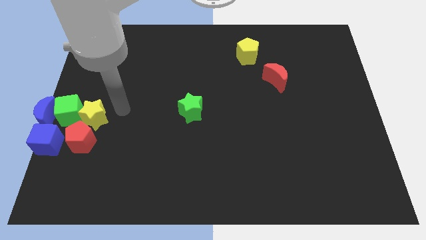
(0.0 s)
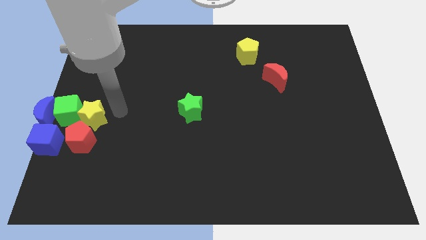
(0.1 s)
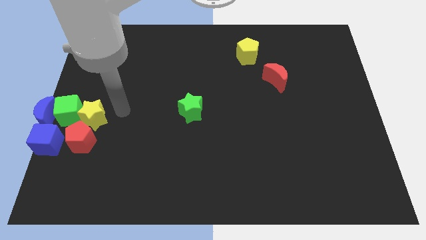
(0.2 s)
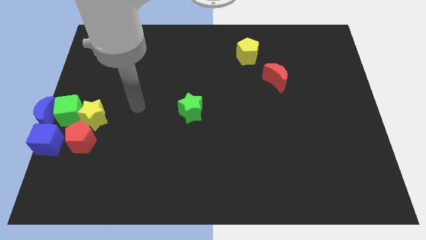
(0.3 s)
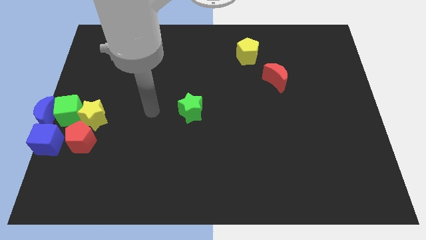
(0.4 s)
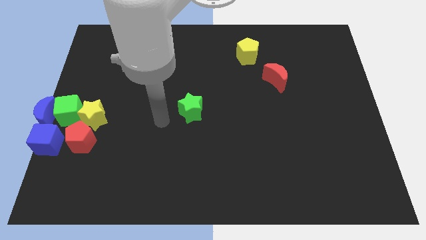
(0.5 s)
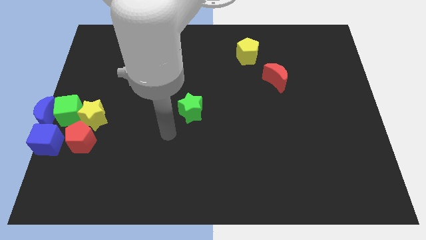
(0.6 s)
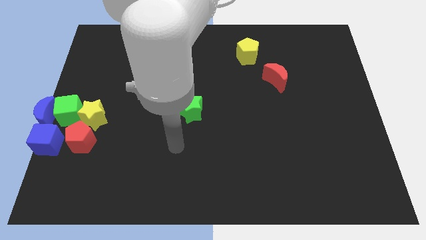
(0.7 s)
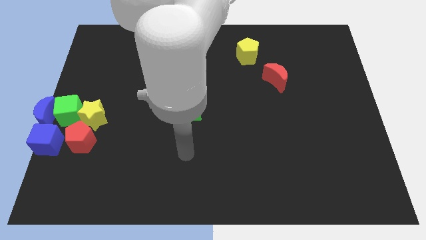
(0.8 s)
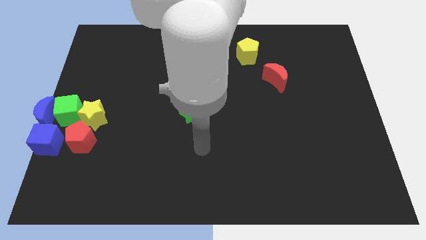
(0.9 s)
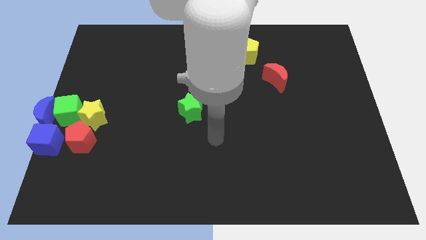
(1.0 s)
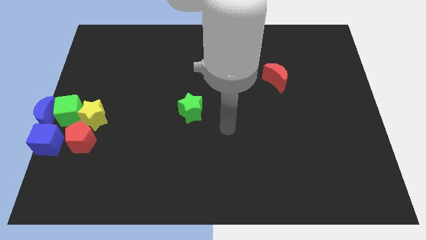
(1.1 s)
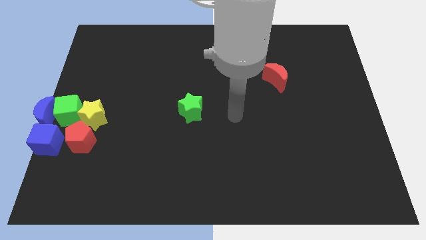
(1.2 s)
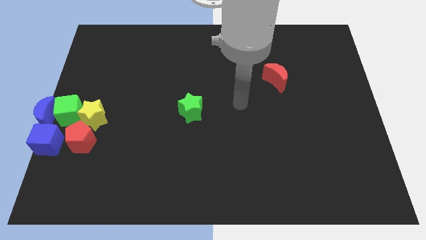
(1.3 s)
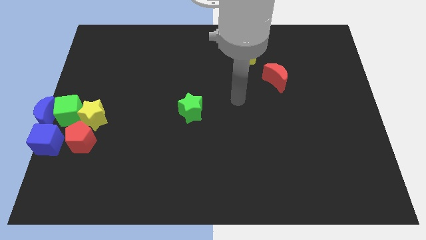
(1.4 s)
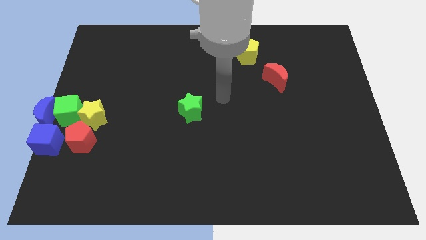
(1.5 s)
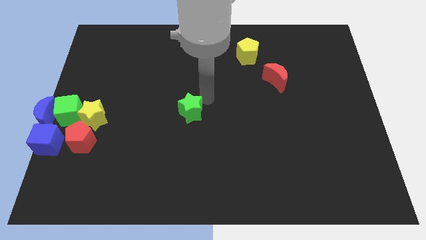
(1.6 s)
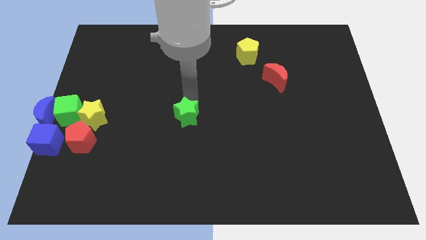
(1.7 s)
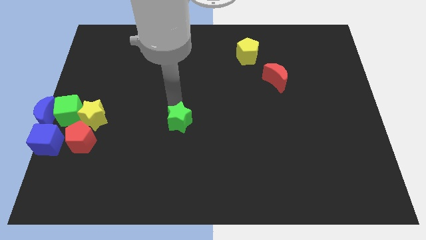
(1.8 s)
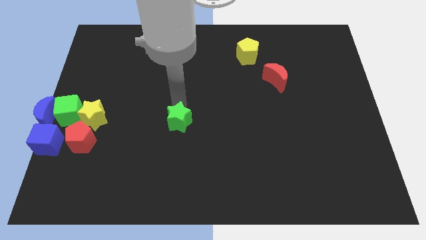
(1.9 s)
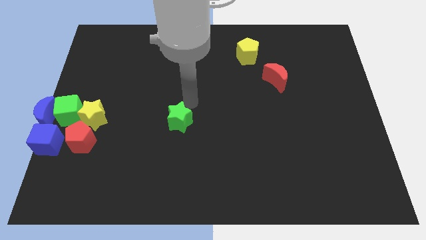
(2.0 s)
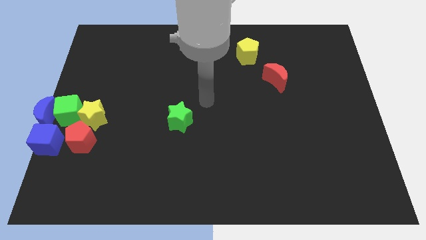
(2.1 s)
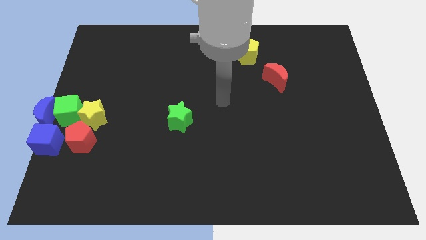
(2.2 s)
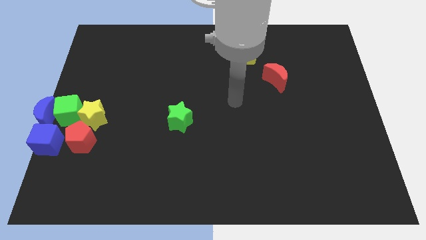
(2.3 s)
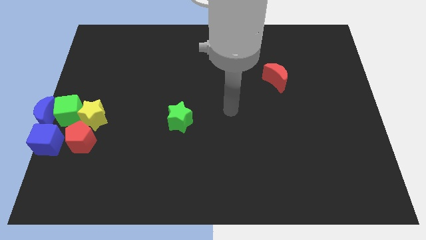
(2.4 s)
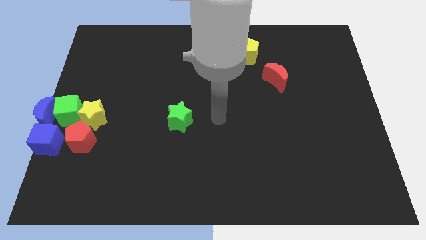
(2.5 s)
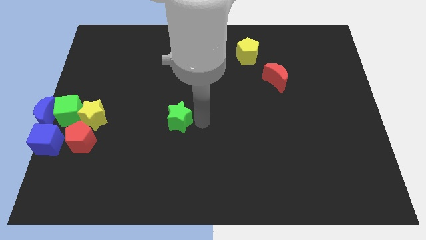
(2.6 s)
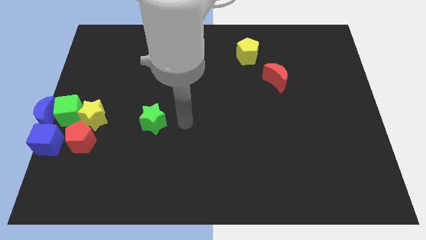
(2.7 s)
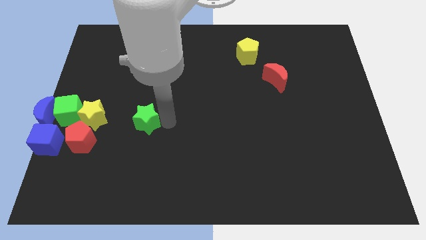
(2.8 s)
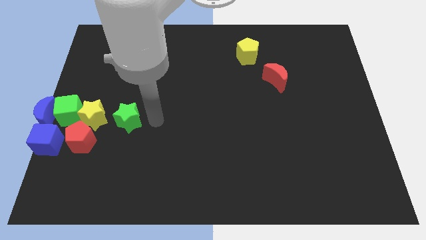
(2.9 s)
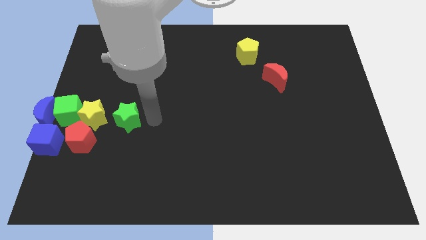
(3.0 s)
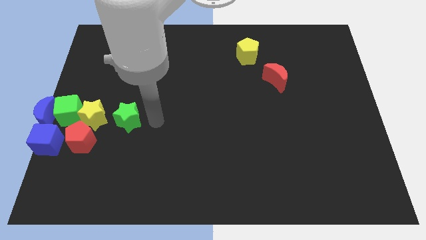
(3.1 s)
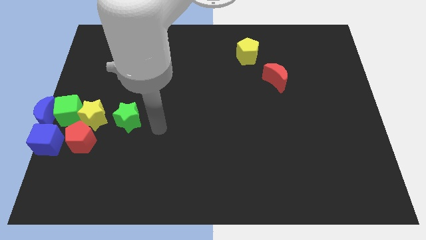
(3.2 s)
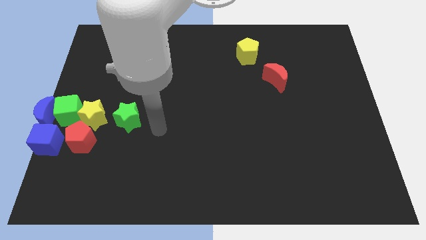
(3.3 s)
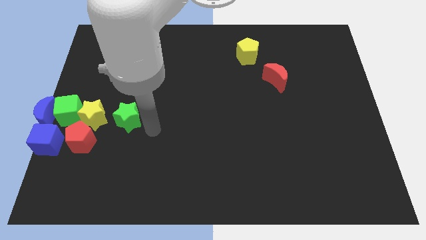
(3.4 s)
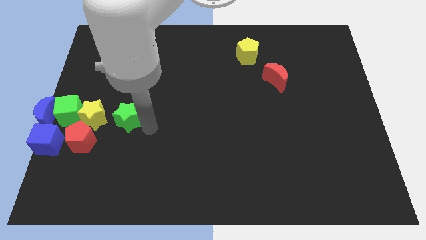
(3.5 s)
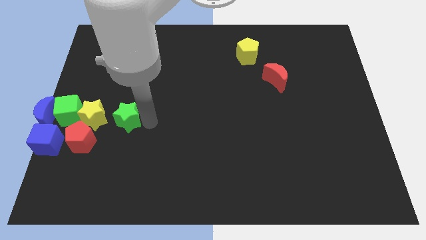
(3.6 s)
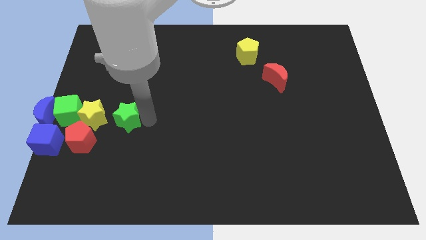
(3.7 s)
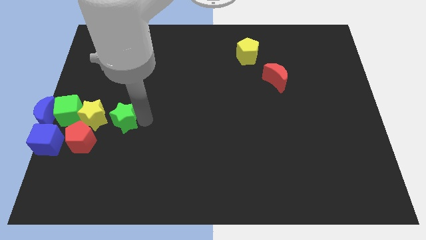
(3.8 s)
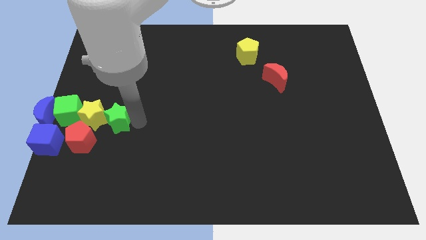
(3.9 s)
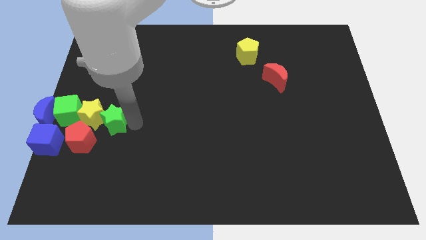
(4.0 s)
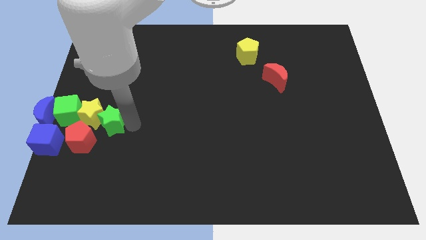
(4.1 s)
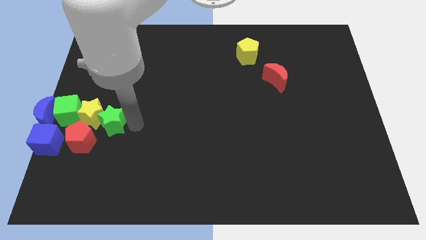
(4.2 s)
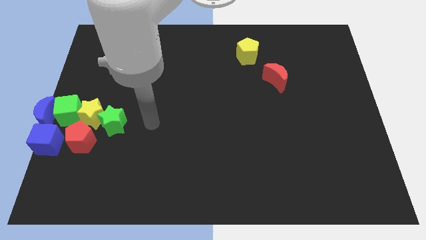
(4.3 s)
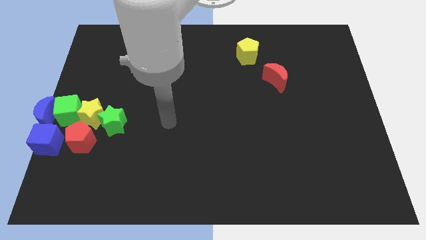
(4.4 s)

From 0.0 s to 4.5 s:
place the green star right to the yellow star

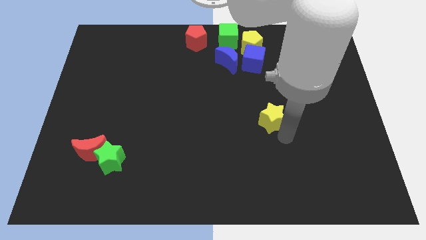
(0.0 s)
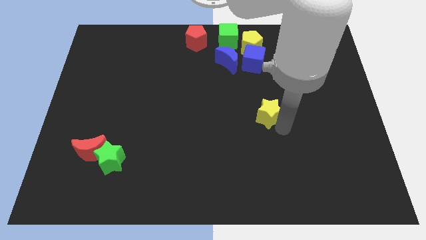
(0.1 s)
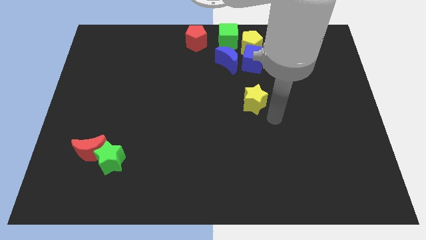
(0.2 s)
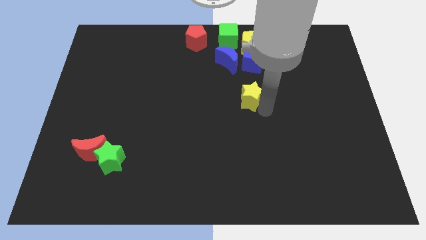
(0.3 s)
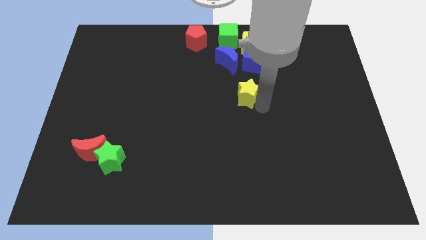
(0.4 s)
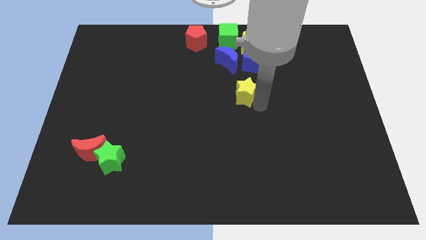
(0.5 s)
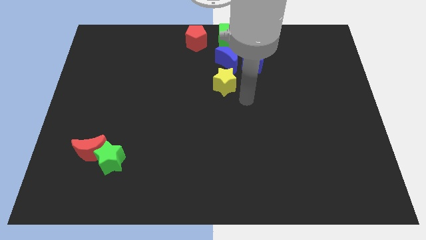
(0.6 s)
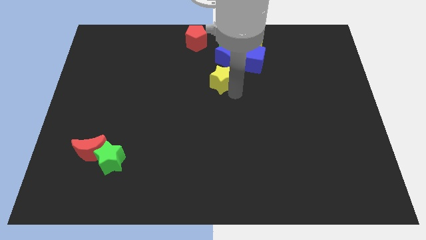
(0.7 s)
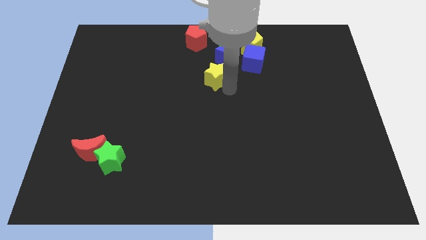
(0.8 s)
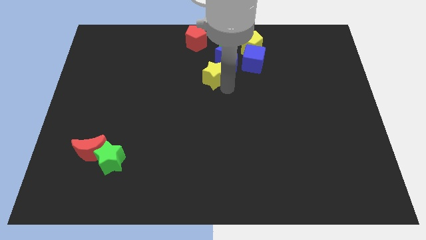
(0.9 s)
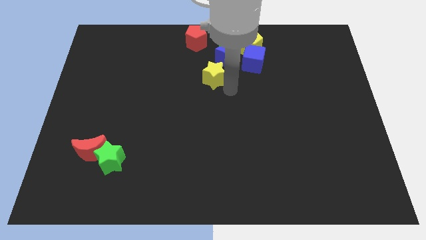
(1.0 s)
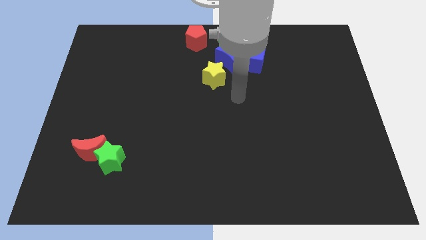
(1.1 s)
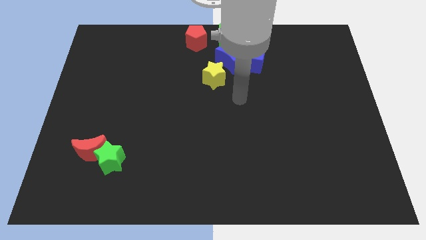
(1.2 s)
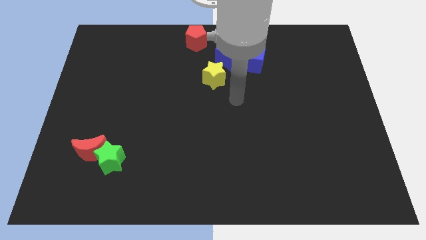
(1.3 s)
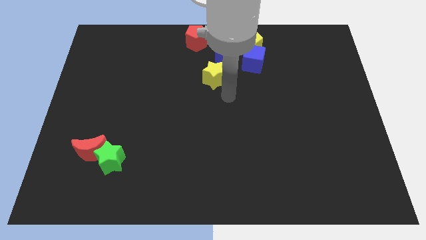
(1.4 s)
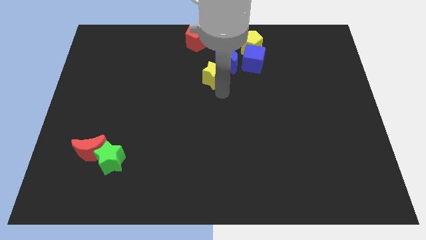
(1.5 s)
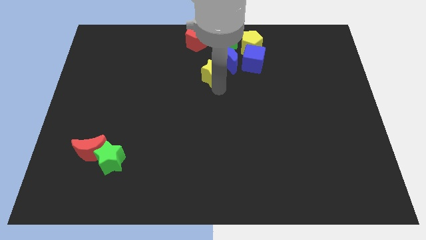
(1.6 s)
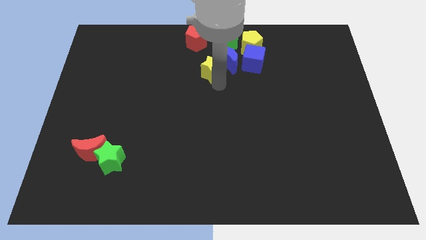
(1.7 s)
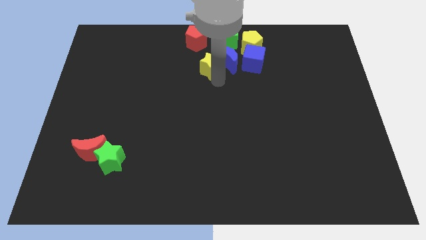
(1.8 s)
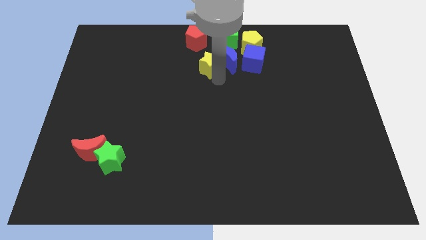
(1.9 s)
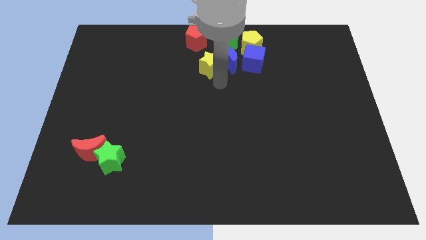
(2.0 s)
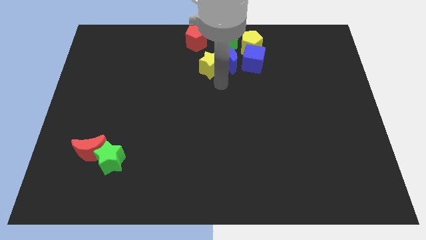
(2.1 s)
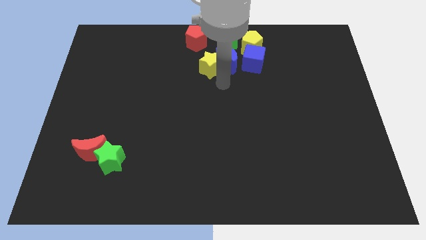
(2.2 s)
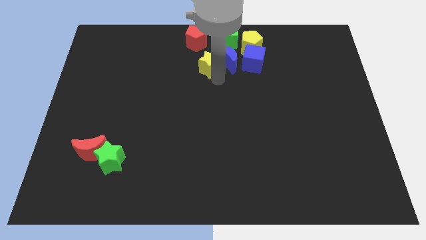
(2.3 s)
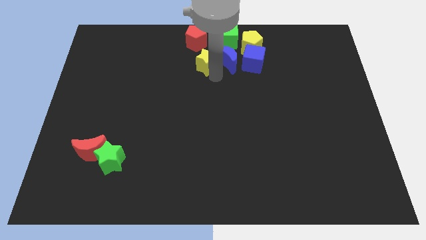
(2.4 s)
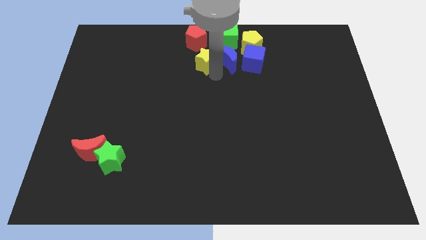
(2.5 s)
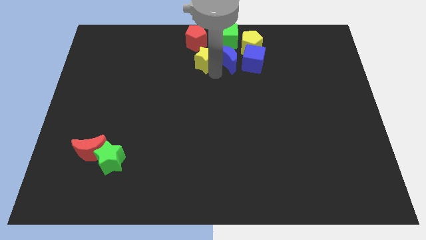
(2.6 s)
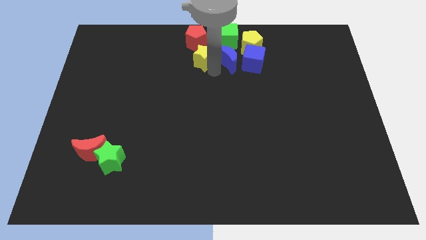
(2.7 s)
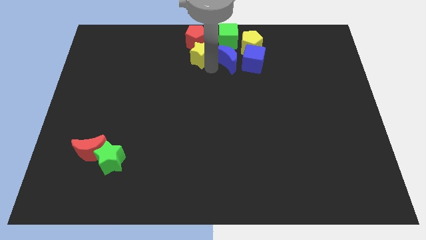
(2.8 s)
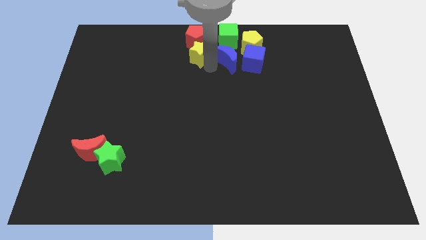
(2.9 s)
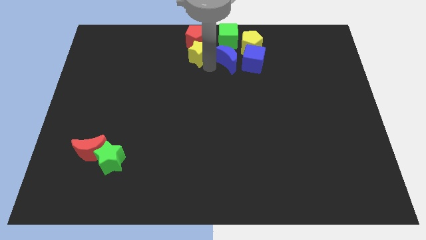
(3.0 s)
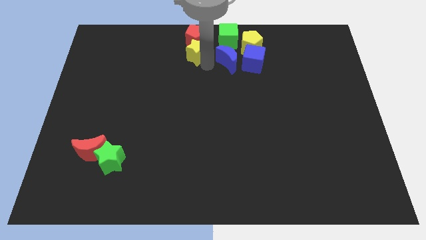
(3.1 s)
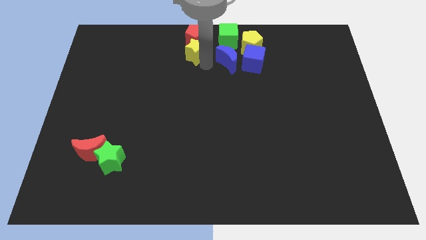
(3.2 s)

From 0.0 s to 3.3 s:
place yellow star below red pentagon

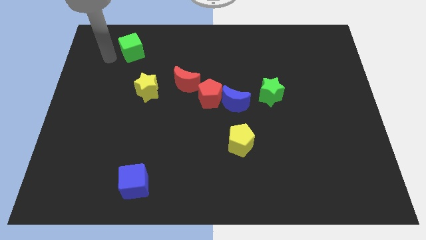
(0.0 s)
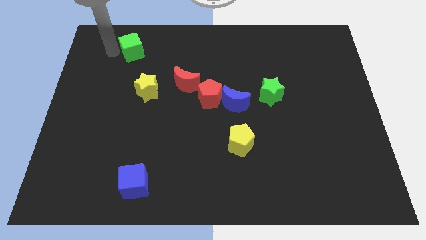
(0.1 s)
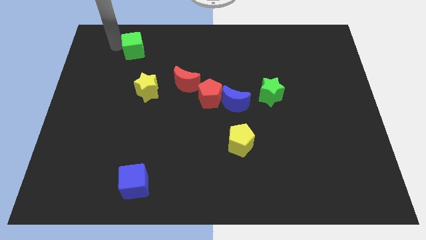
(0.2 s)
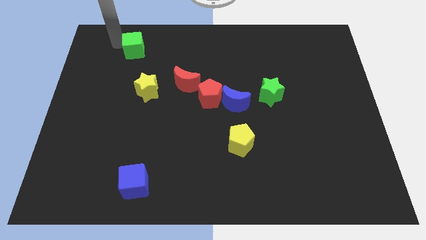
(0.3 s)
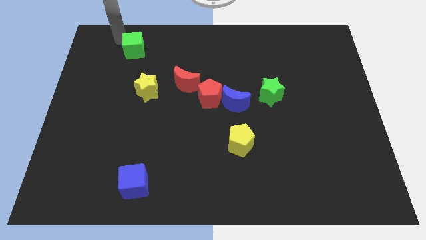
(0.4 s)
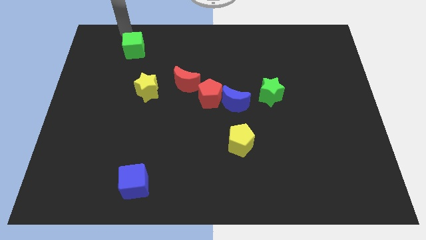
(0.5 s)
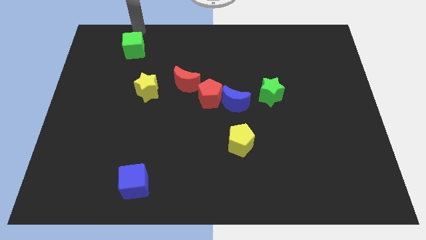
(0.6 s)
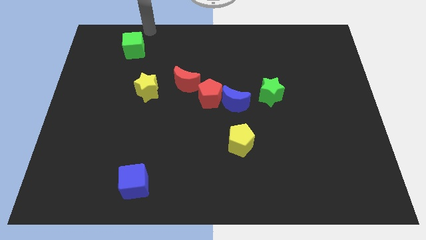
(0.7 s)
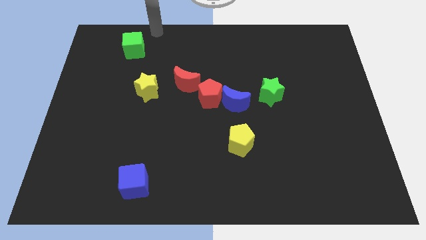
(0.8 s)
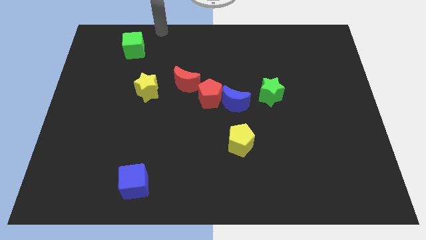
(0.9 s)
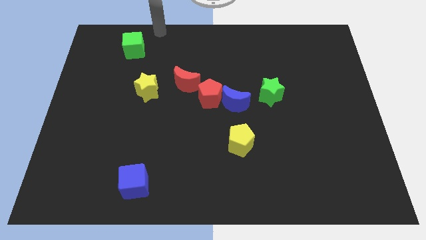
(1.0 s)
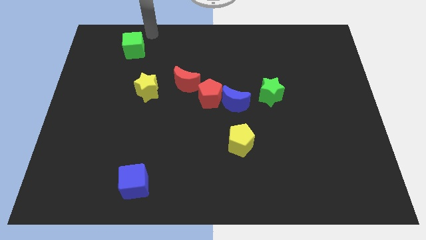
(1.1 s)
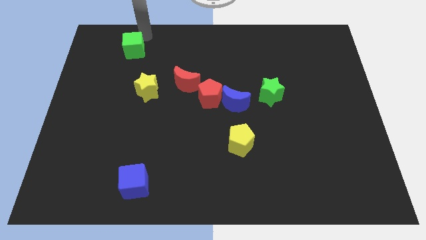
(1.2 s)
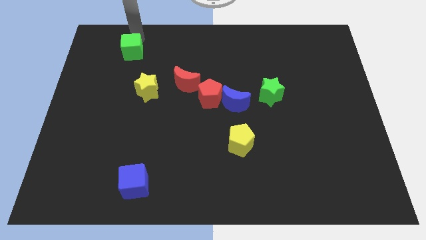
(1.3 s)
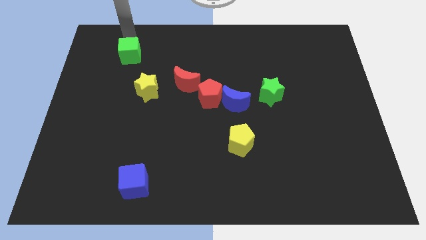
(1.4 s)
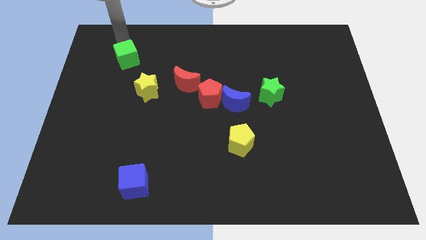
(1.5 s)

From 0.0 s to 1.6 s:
push the green cube towards the yellow star
